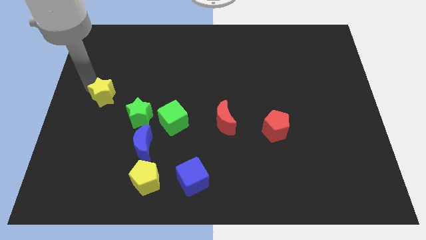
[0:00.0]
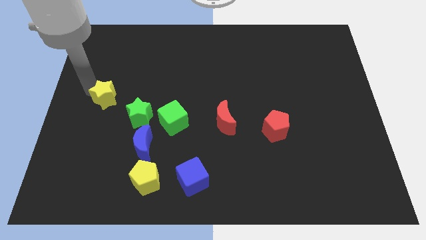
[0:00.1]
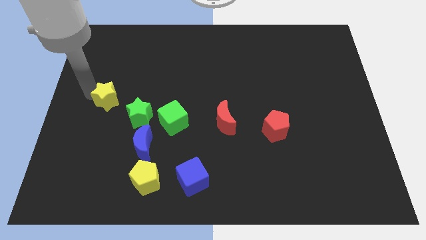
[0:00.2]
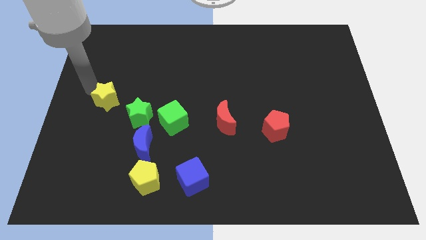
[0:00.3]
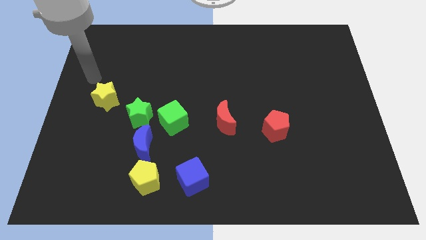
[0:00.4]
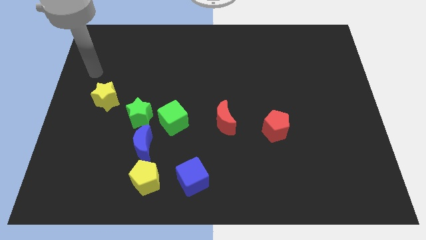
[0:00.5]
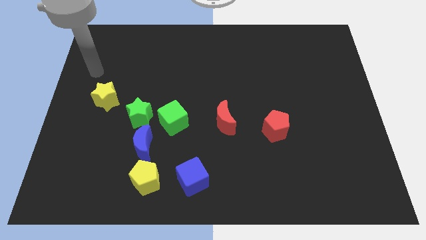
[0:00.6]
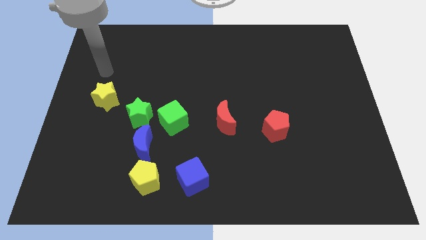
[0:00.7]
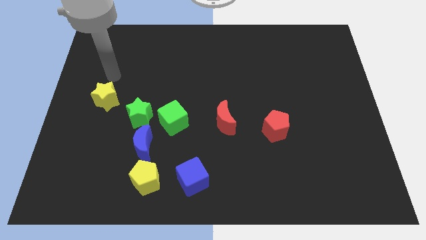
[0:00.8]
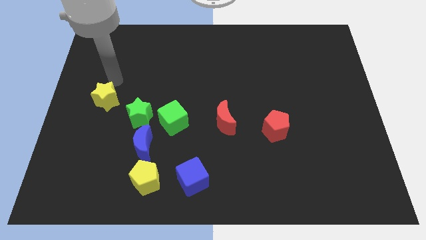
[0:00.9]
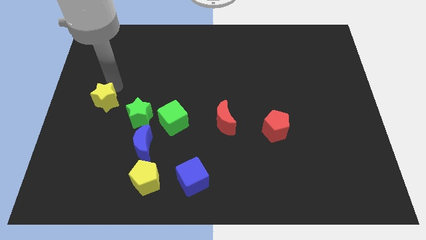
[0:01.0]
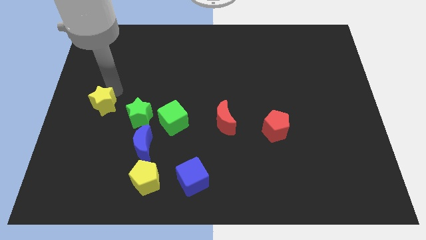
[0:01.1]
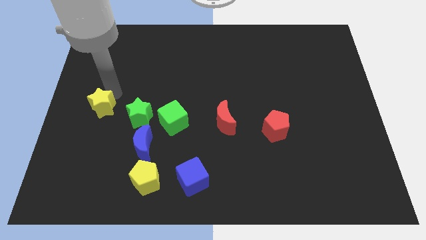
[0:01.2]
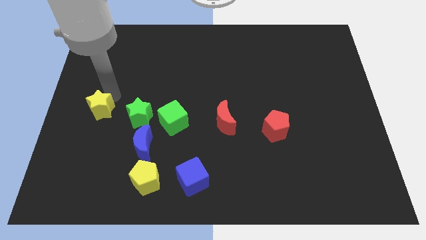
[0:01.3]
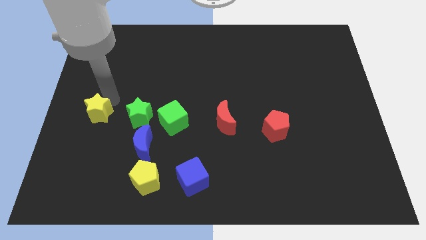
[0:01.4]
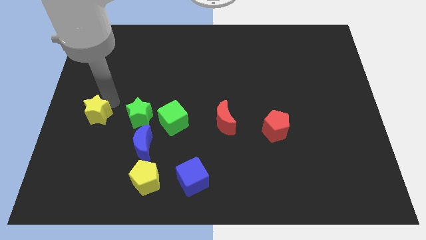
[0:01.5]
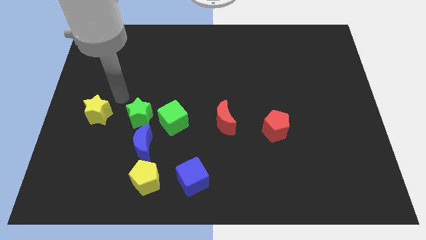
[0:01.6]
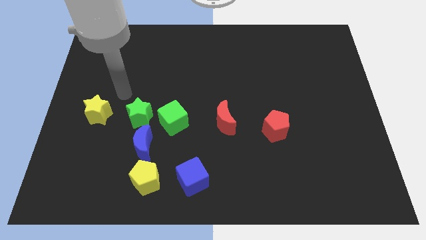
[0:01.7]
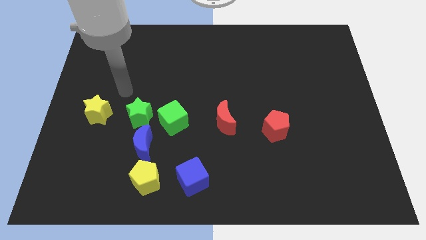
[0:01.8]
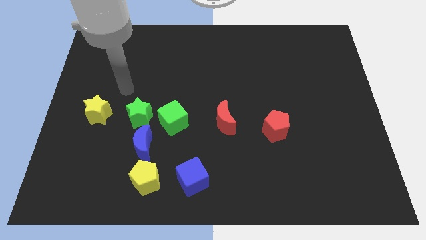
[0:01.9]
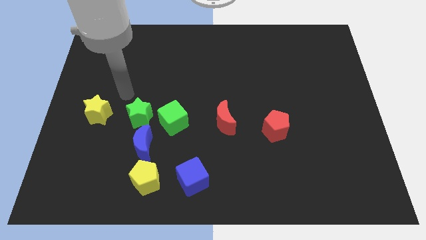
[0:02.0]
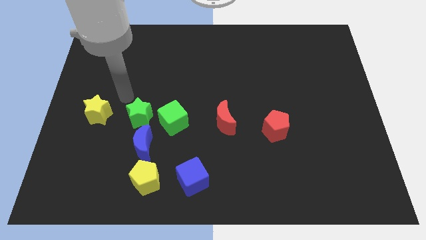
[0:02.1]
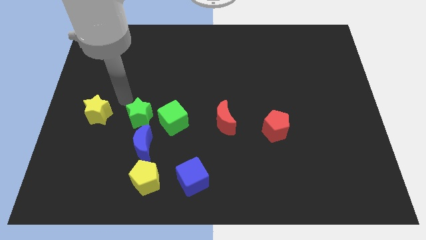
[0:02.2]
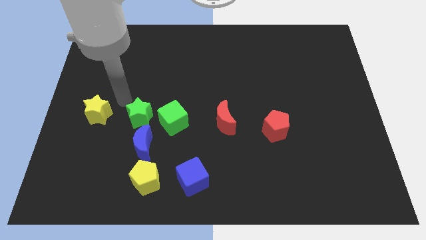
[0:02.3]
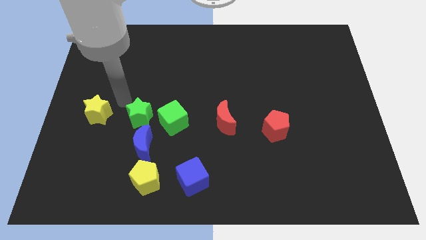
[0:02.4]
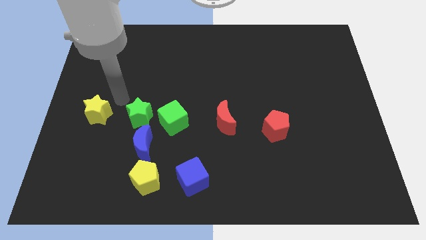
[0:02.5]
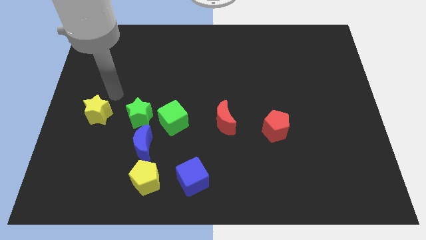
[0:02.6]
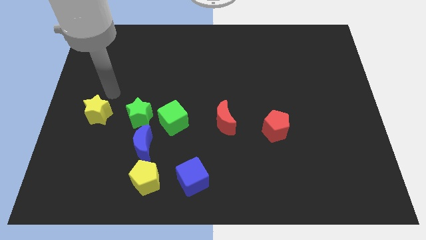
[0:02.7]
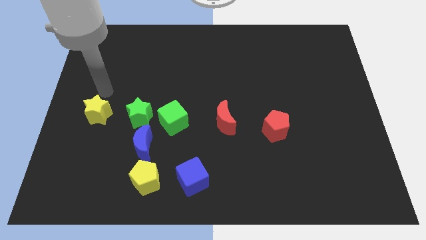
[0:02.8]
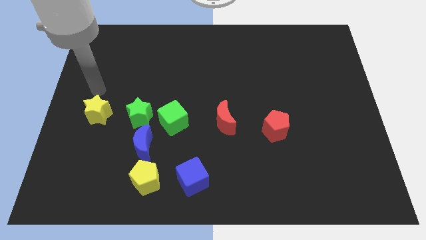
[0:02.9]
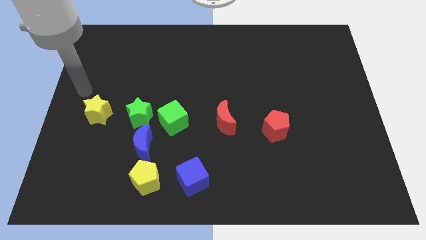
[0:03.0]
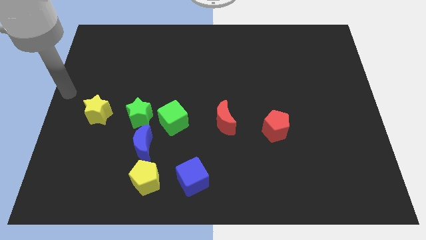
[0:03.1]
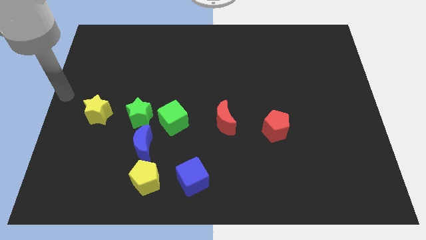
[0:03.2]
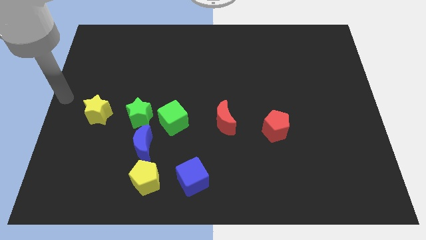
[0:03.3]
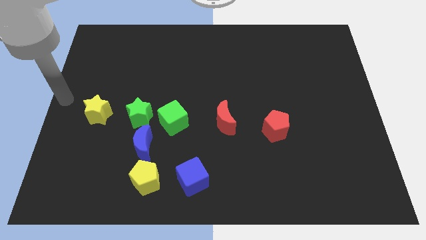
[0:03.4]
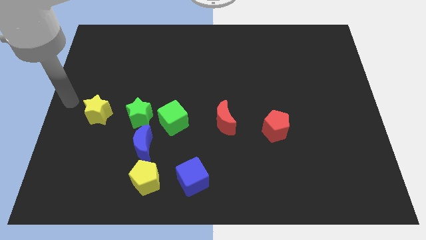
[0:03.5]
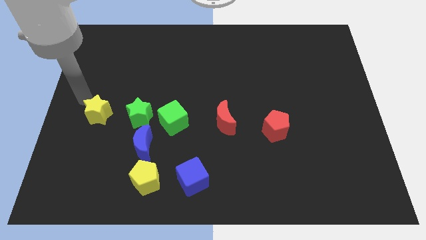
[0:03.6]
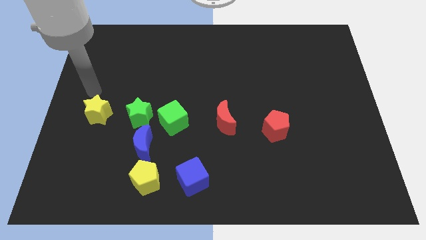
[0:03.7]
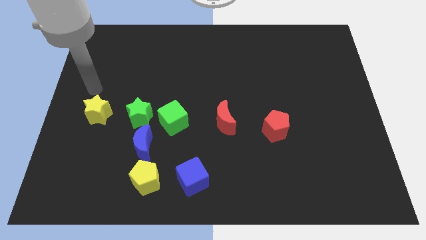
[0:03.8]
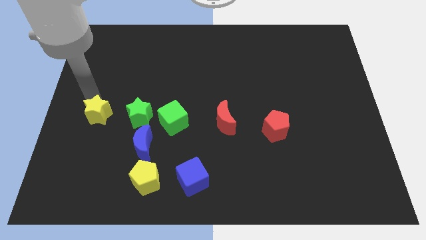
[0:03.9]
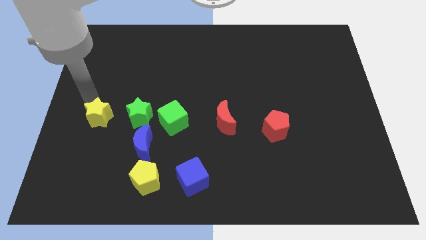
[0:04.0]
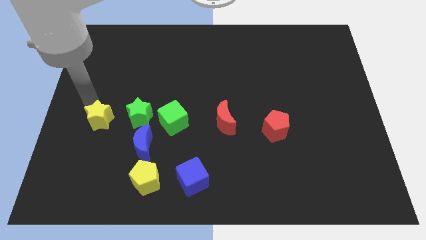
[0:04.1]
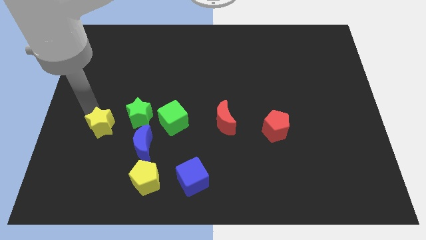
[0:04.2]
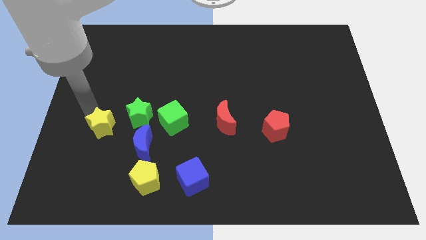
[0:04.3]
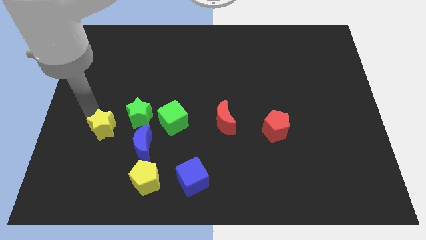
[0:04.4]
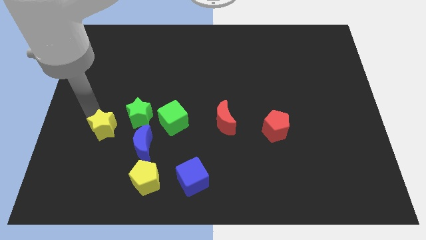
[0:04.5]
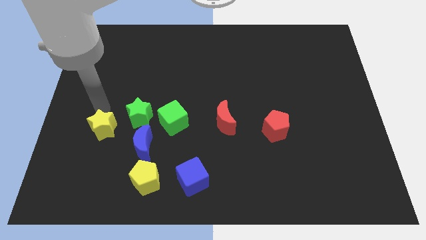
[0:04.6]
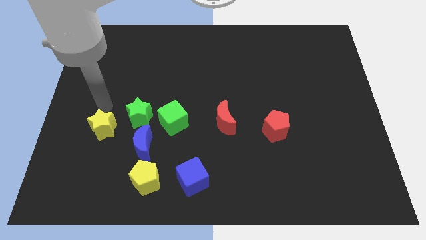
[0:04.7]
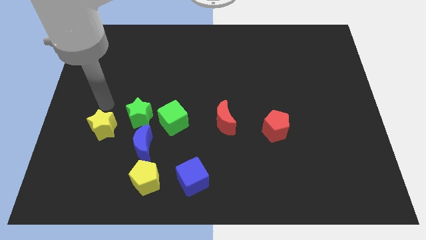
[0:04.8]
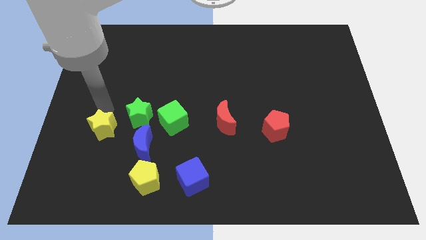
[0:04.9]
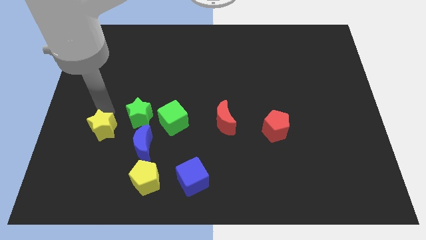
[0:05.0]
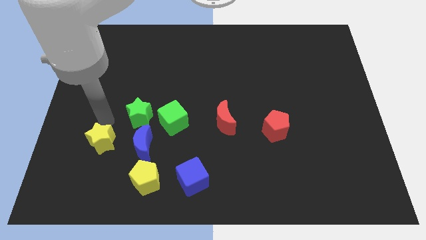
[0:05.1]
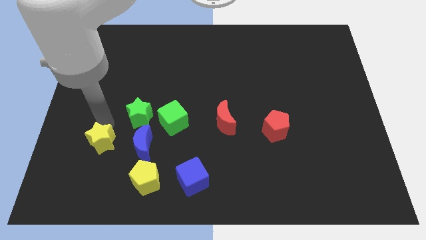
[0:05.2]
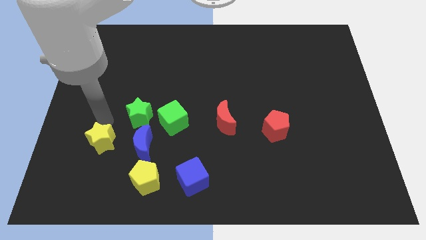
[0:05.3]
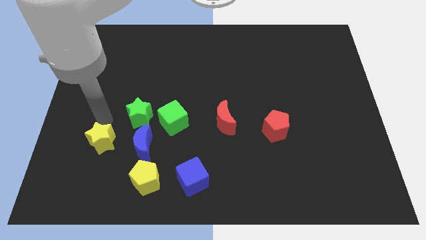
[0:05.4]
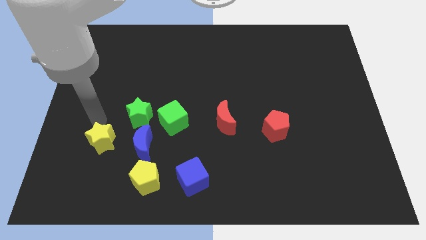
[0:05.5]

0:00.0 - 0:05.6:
place yellow star parallel to blue moon

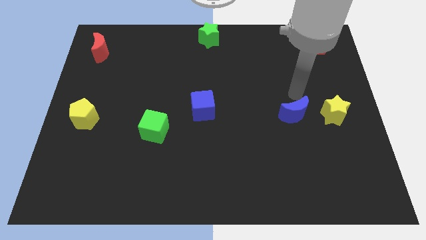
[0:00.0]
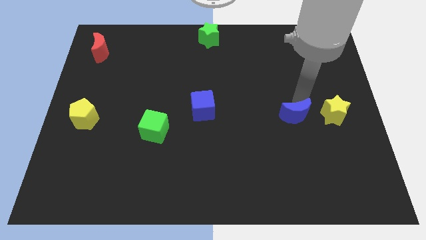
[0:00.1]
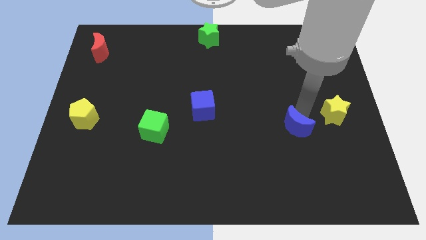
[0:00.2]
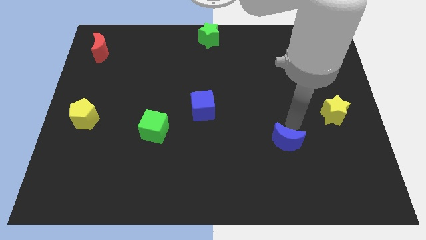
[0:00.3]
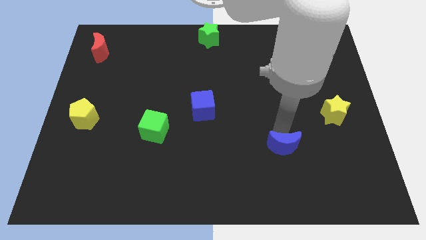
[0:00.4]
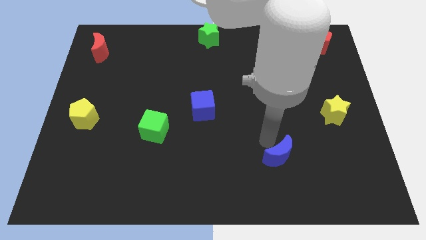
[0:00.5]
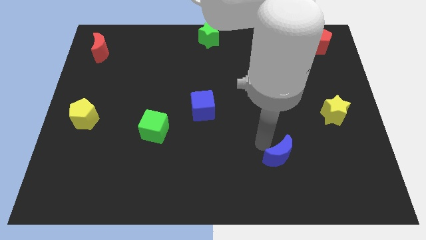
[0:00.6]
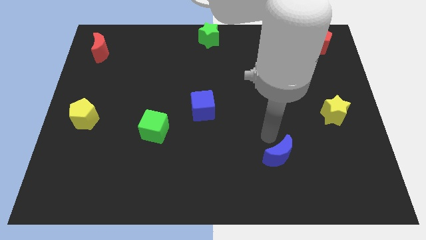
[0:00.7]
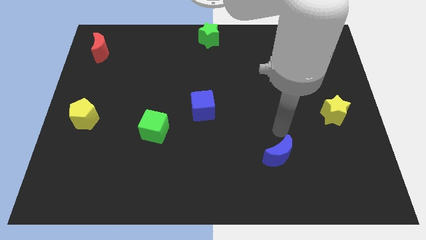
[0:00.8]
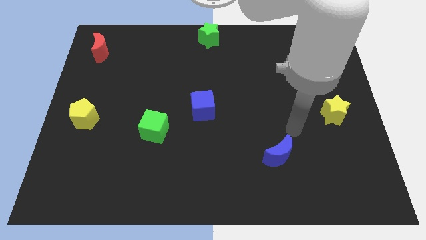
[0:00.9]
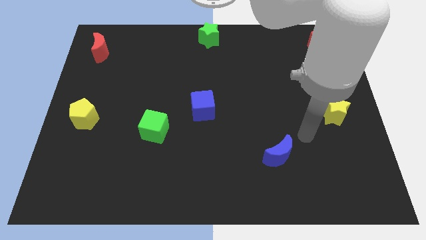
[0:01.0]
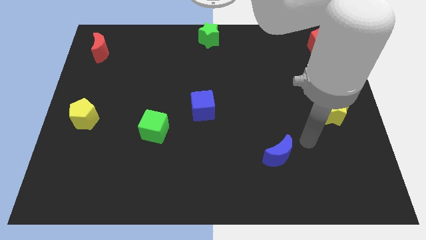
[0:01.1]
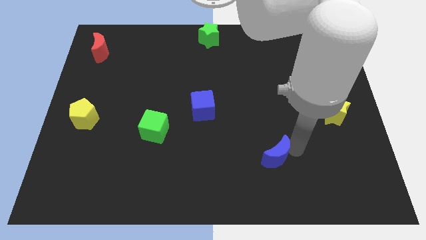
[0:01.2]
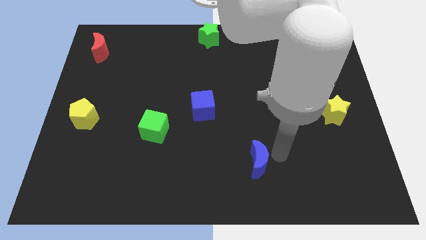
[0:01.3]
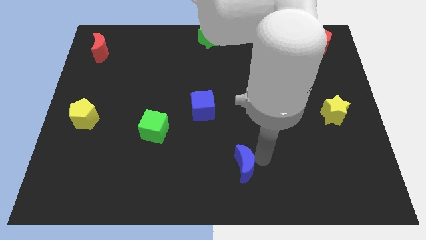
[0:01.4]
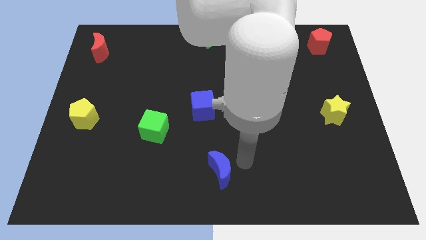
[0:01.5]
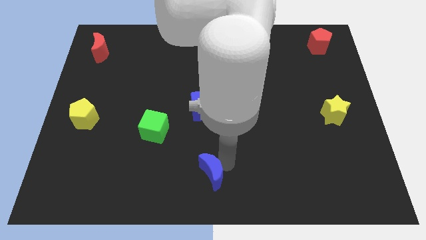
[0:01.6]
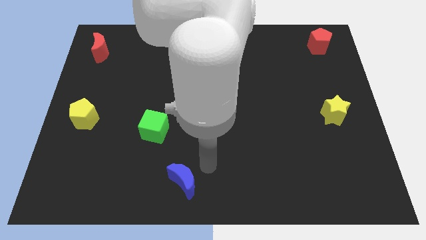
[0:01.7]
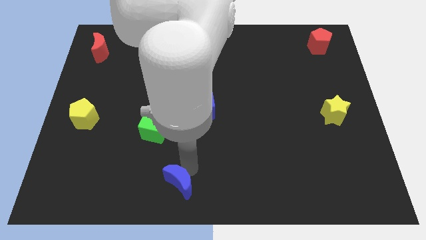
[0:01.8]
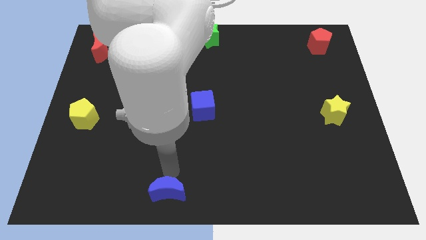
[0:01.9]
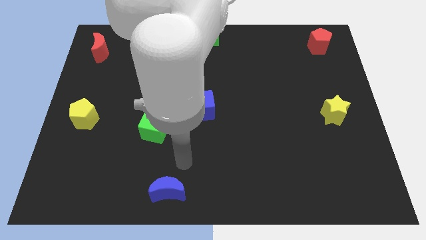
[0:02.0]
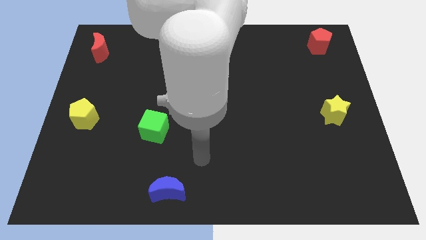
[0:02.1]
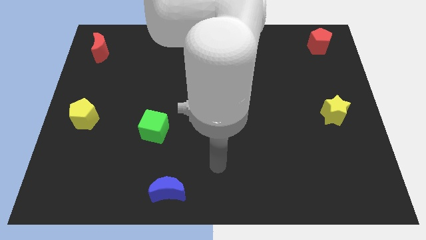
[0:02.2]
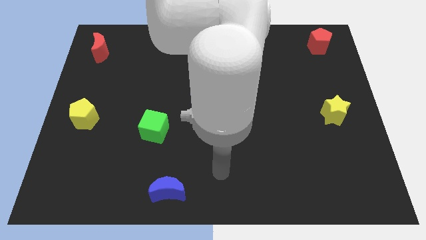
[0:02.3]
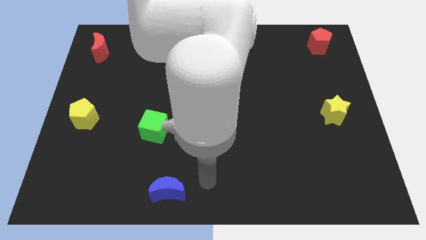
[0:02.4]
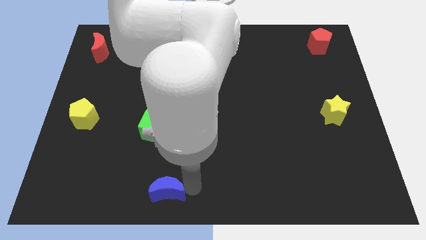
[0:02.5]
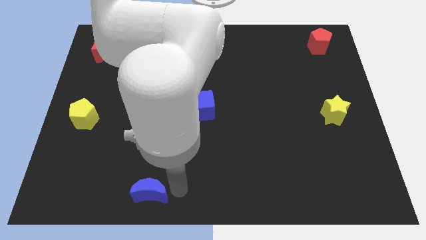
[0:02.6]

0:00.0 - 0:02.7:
place blue moon vertical to green cube

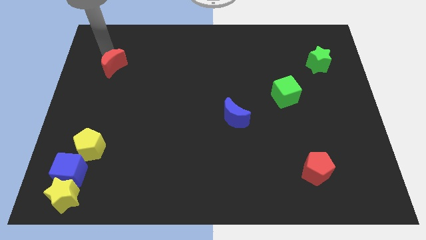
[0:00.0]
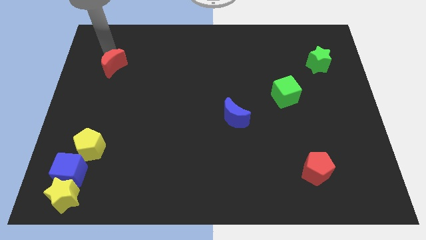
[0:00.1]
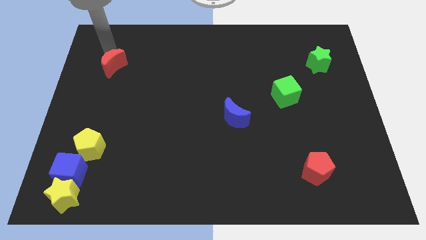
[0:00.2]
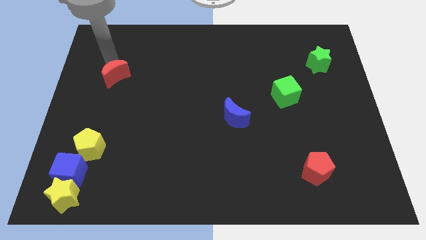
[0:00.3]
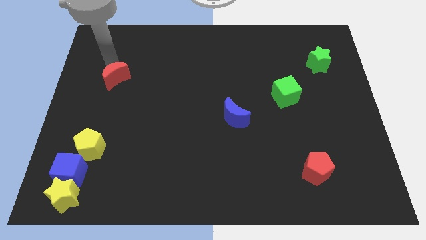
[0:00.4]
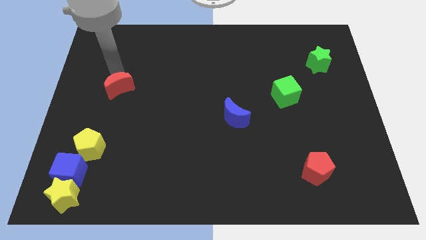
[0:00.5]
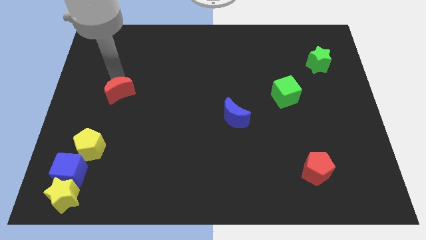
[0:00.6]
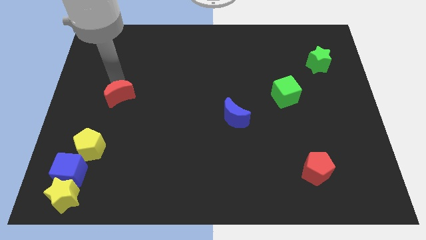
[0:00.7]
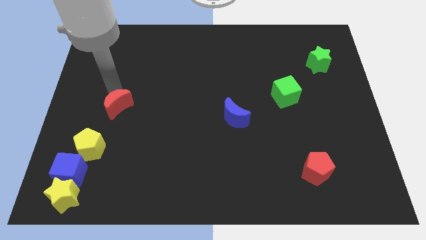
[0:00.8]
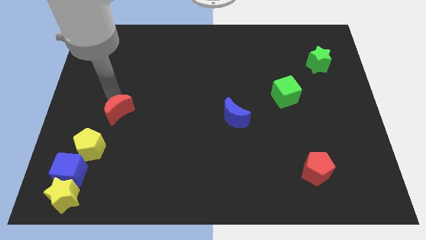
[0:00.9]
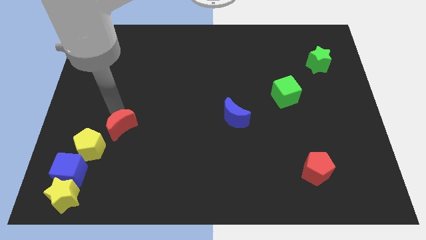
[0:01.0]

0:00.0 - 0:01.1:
place red moon diagonally right above yellow pentagon
